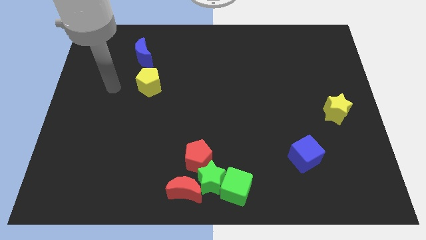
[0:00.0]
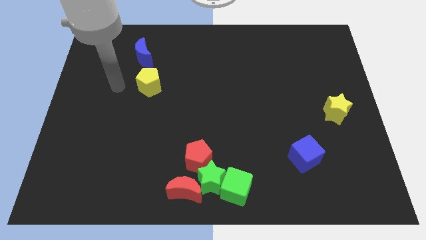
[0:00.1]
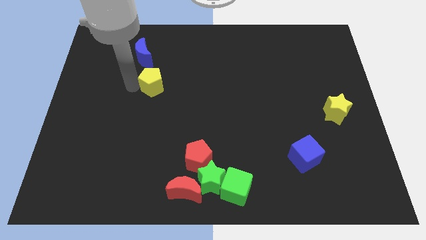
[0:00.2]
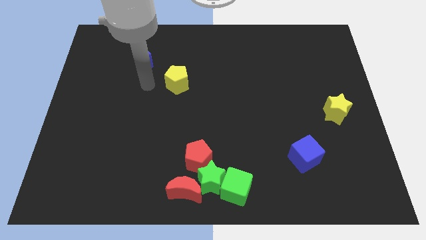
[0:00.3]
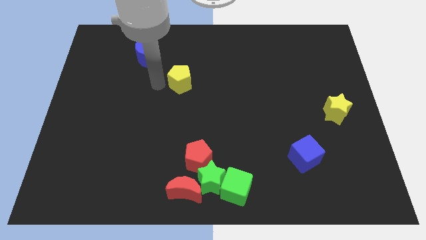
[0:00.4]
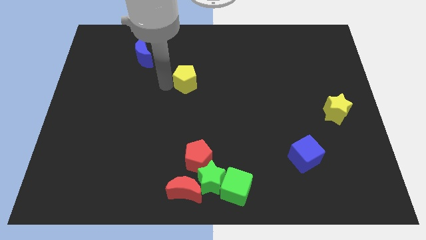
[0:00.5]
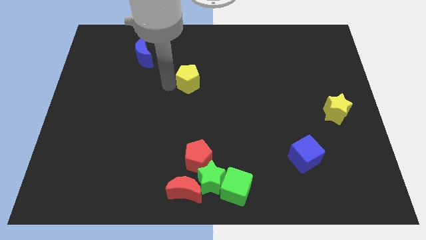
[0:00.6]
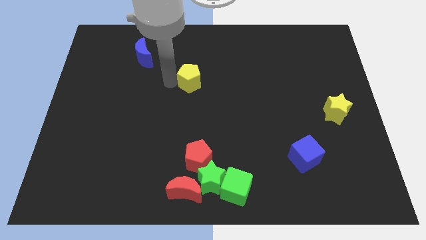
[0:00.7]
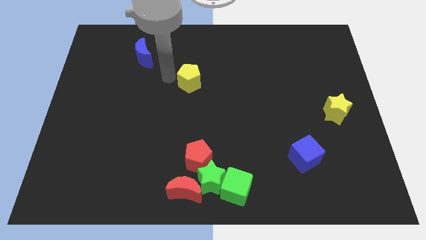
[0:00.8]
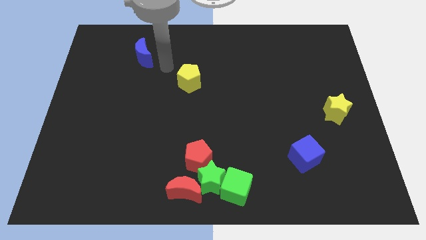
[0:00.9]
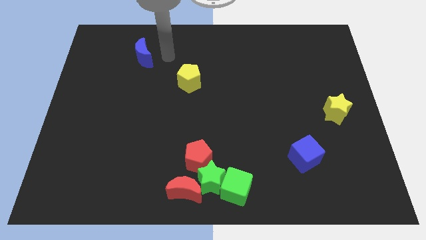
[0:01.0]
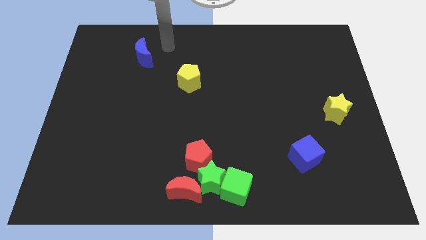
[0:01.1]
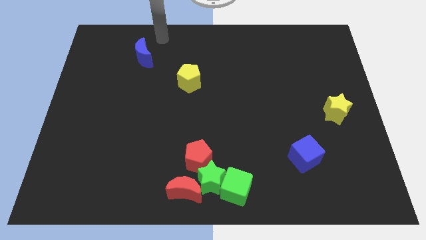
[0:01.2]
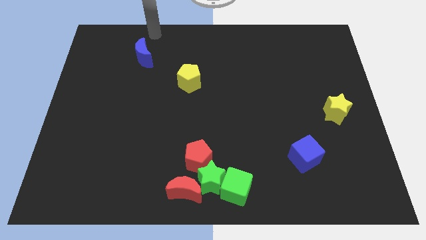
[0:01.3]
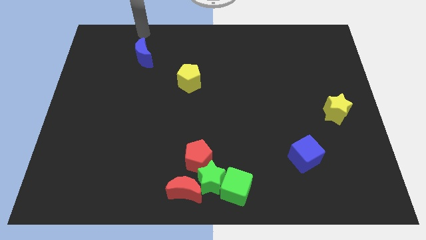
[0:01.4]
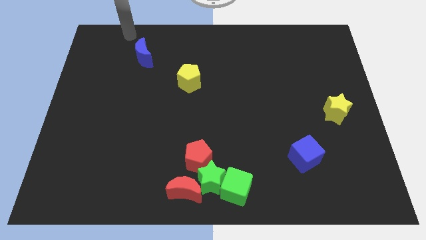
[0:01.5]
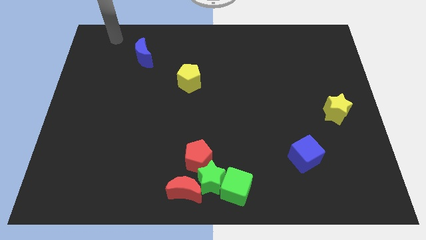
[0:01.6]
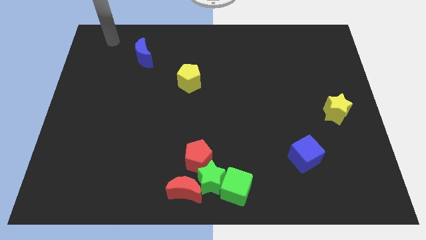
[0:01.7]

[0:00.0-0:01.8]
slide the yellow pentagon diagonally bottom right to the blue moon

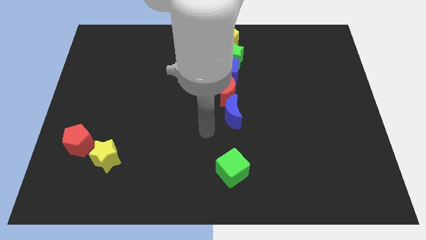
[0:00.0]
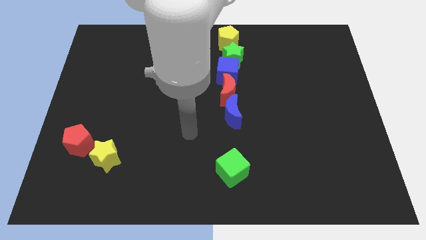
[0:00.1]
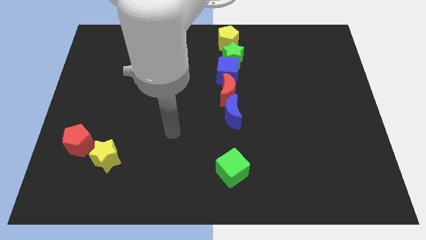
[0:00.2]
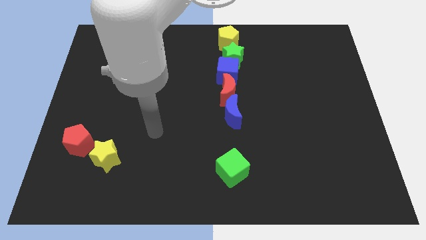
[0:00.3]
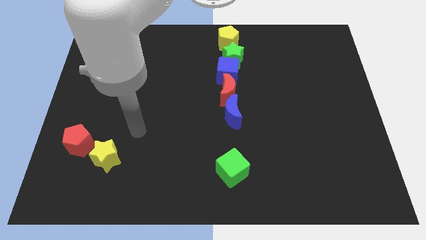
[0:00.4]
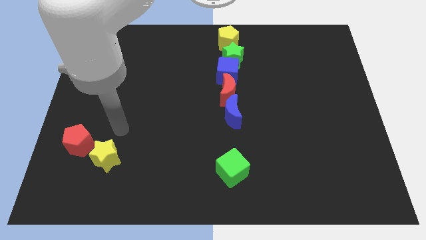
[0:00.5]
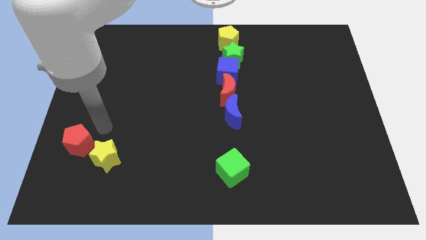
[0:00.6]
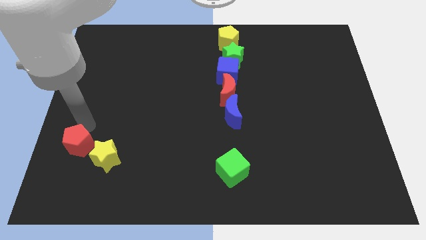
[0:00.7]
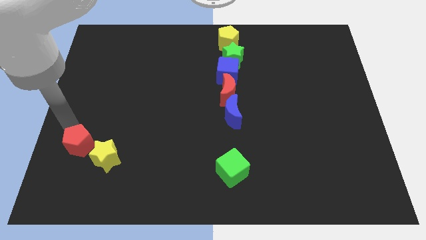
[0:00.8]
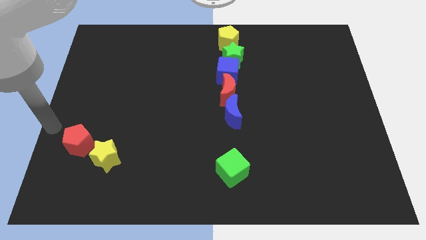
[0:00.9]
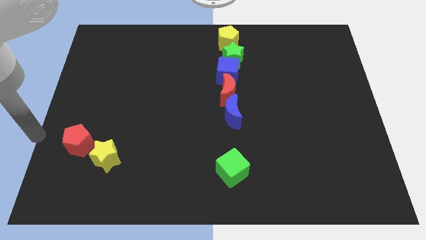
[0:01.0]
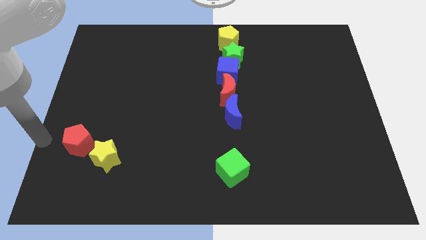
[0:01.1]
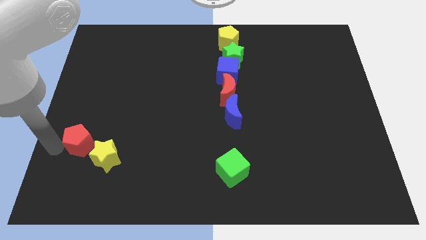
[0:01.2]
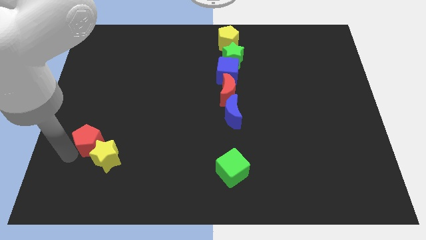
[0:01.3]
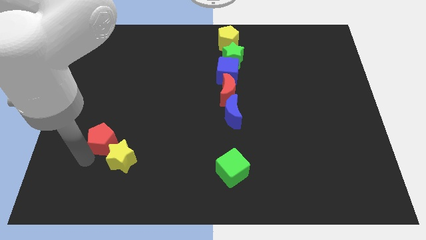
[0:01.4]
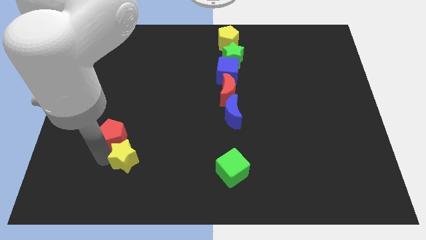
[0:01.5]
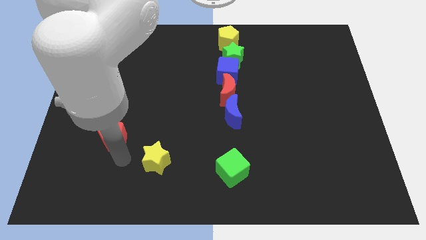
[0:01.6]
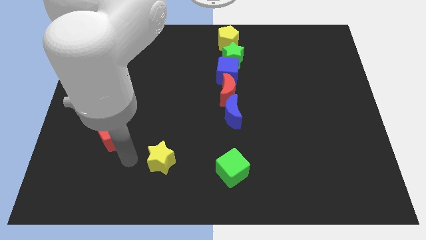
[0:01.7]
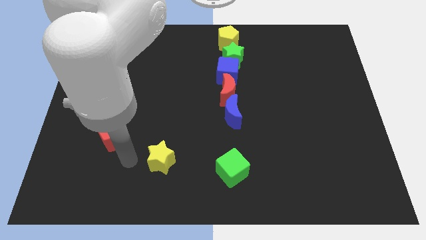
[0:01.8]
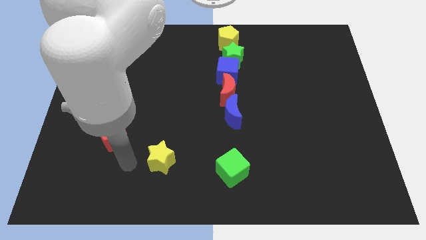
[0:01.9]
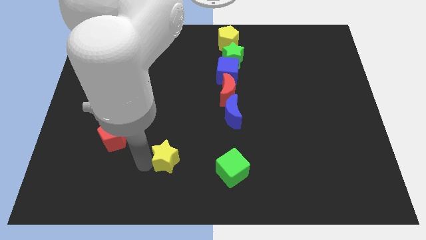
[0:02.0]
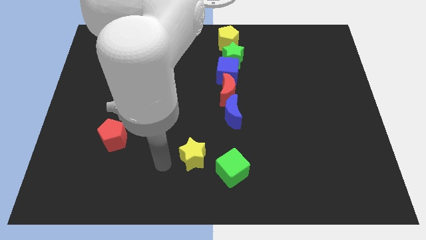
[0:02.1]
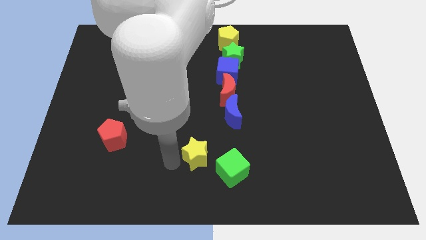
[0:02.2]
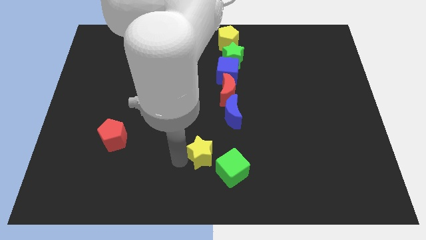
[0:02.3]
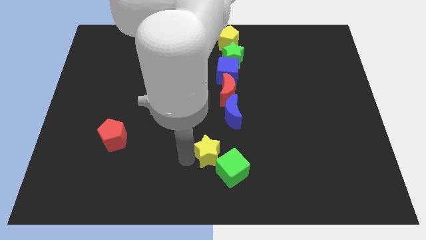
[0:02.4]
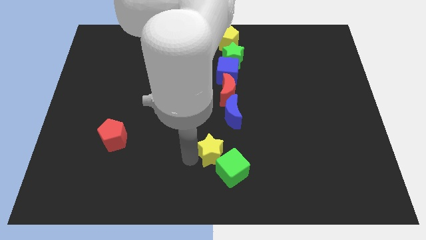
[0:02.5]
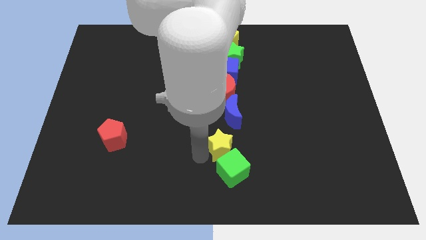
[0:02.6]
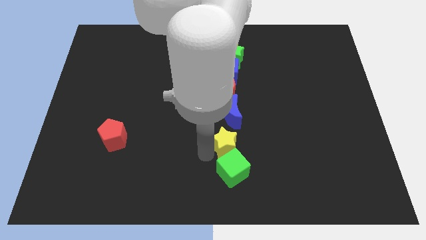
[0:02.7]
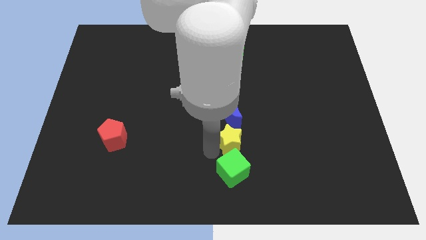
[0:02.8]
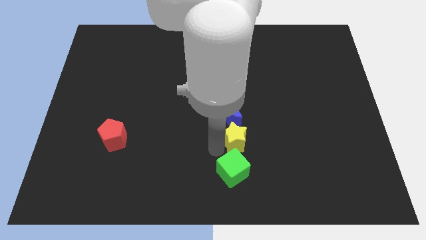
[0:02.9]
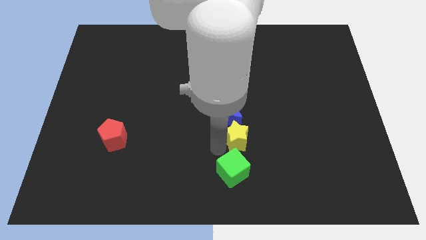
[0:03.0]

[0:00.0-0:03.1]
push the yellow star in between the blue crescent and the green cube

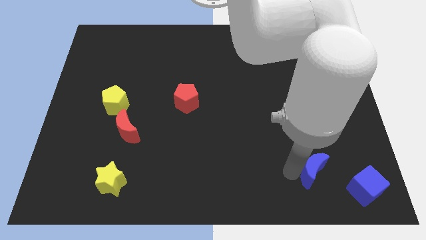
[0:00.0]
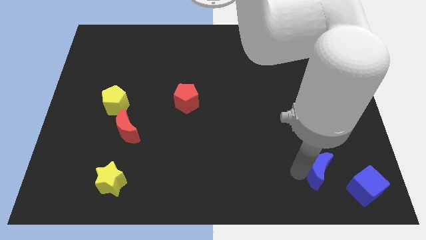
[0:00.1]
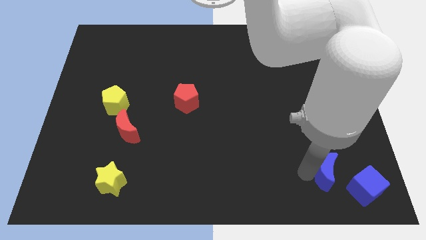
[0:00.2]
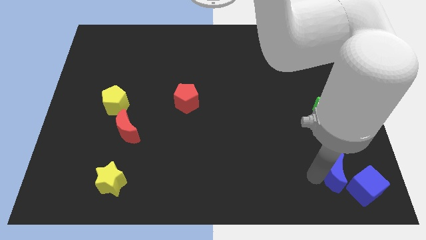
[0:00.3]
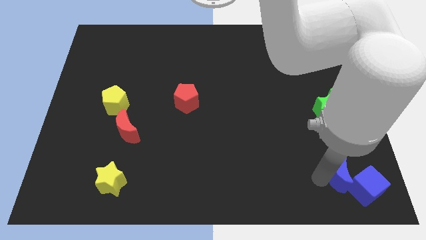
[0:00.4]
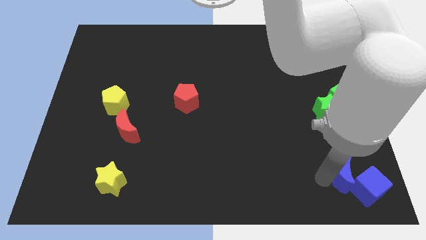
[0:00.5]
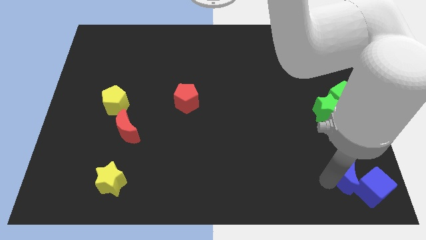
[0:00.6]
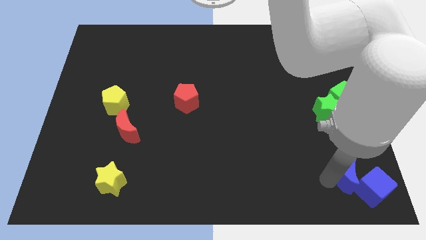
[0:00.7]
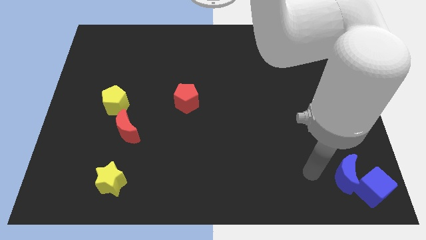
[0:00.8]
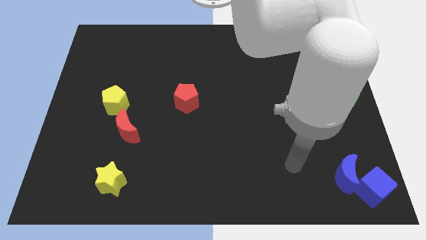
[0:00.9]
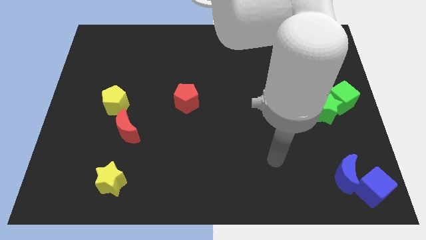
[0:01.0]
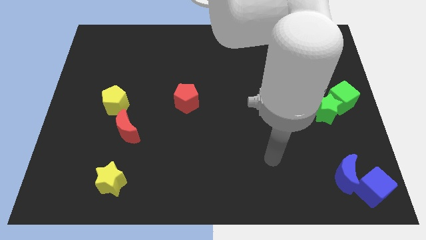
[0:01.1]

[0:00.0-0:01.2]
push the blue crescent into the blue cube

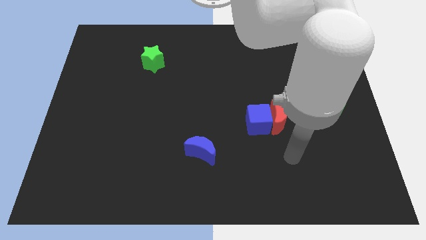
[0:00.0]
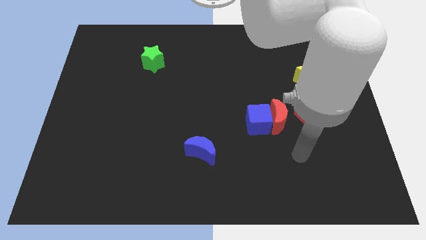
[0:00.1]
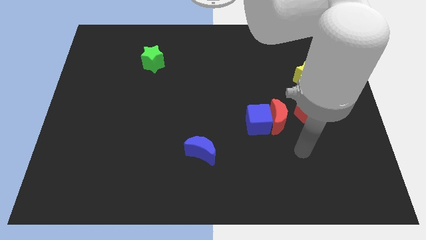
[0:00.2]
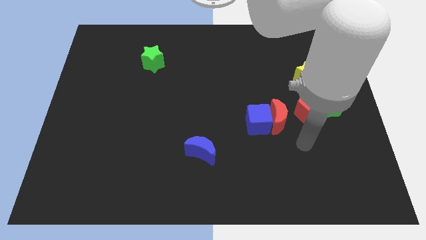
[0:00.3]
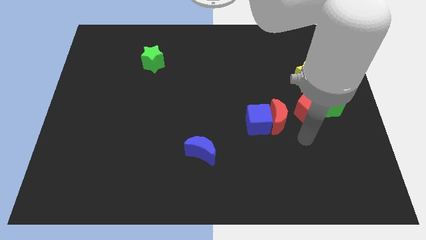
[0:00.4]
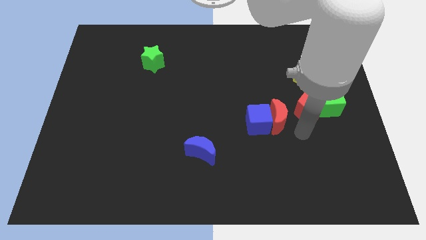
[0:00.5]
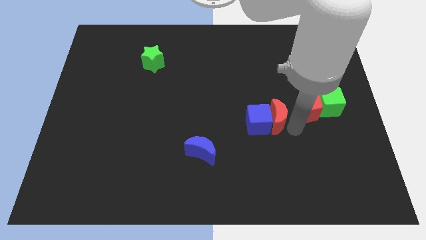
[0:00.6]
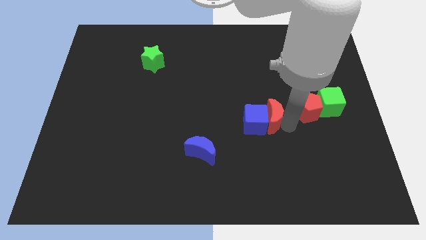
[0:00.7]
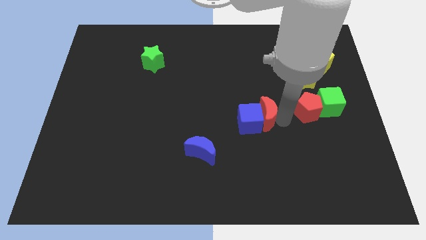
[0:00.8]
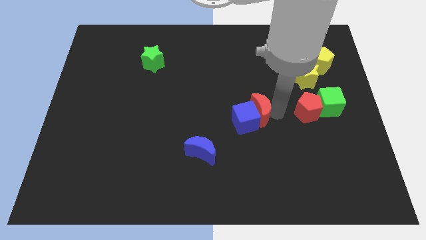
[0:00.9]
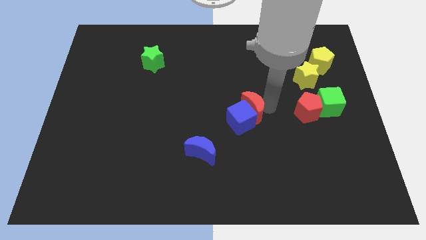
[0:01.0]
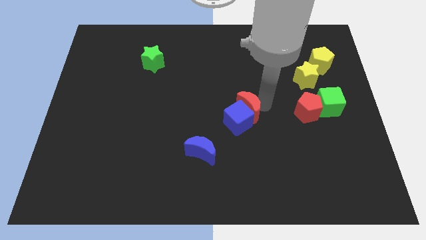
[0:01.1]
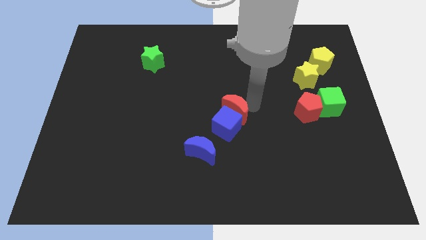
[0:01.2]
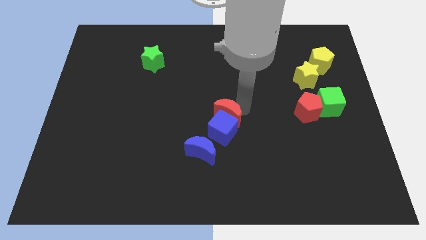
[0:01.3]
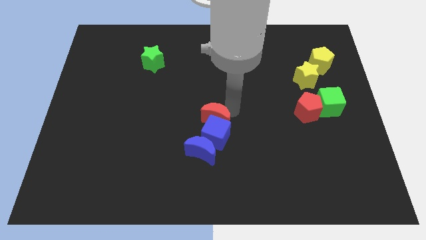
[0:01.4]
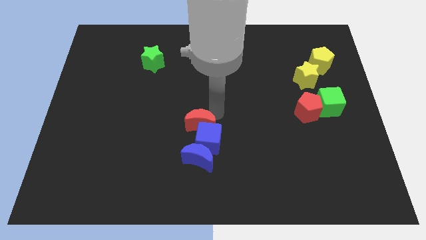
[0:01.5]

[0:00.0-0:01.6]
slide the red moon and blue cube into the top side of the blue crescent

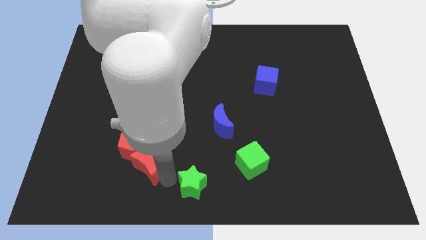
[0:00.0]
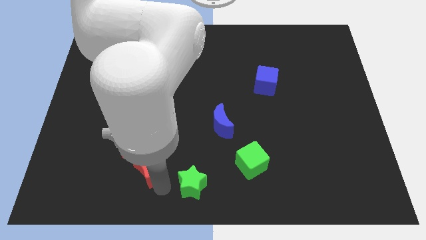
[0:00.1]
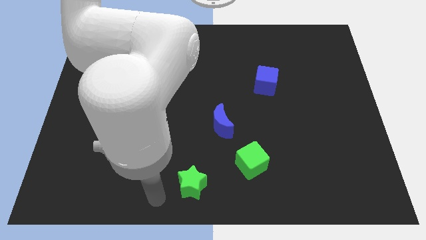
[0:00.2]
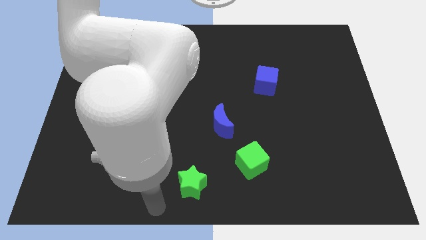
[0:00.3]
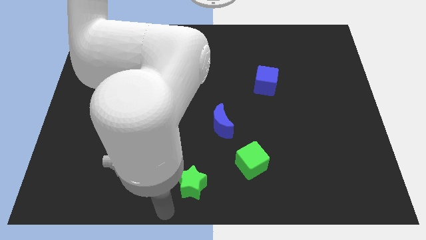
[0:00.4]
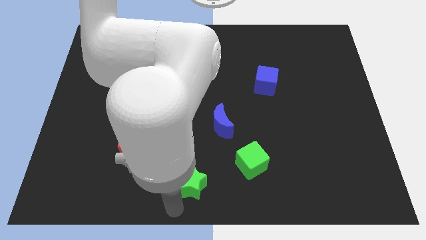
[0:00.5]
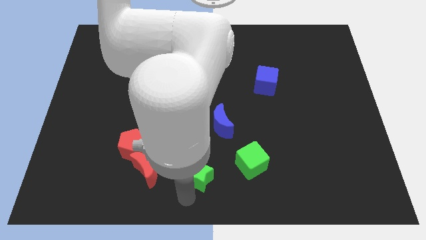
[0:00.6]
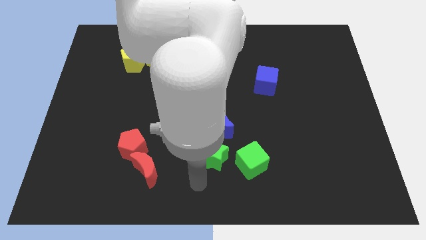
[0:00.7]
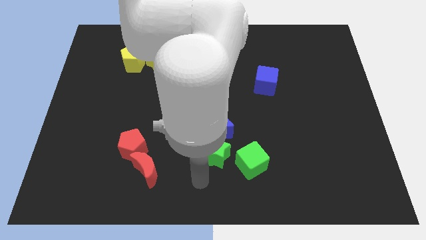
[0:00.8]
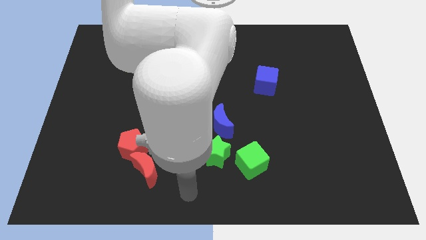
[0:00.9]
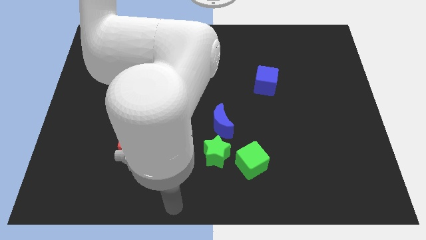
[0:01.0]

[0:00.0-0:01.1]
push the green star to the bottom left to the blue crescent

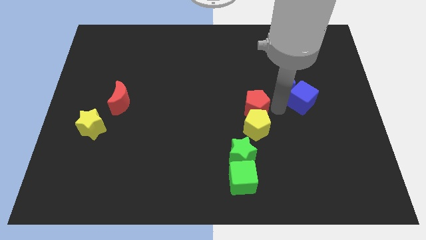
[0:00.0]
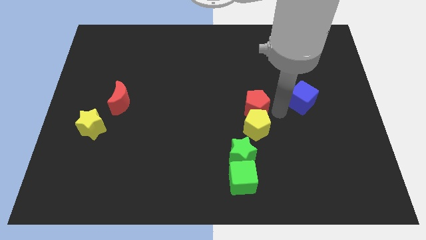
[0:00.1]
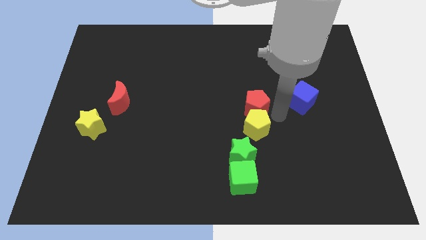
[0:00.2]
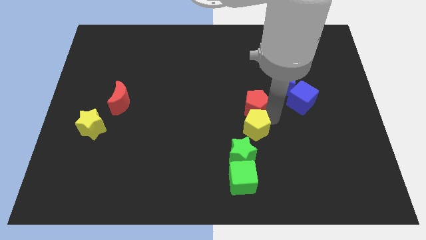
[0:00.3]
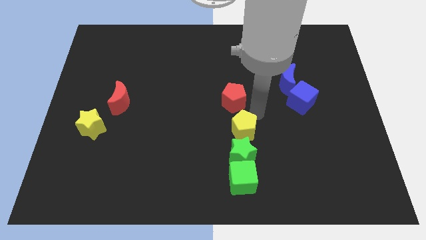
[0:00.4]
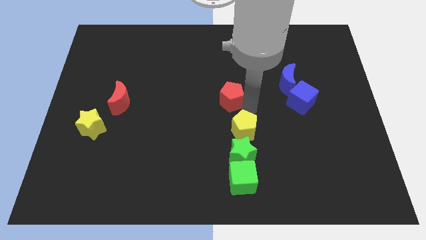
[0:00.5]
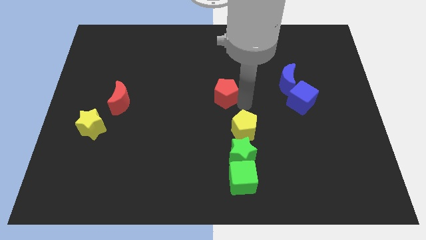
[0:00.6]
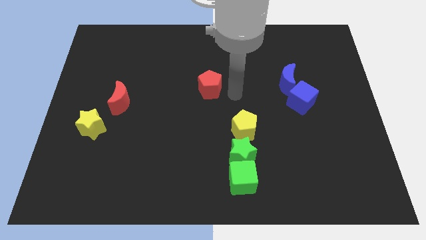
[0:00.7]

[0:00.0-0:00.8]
move the red pentagon away from the yellow pentagon
